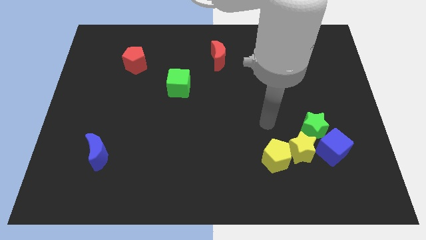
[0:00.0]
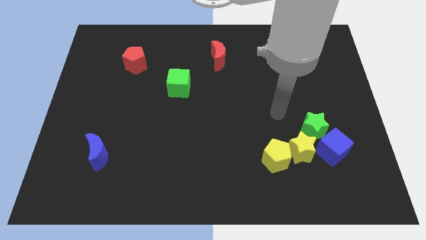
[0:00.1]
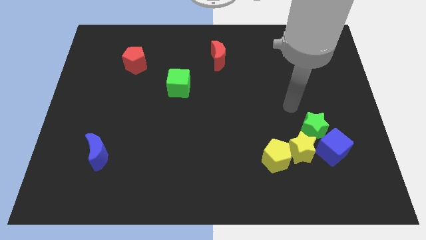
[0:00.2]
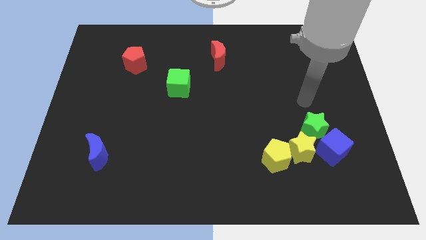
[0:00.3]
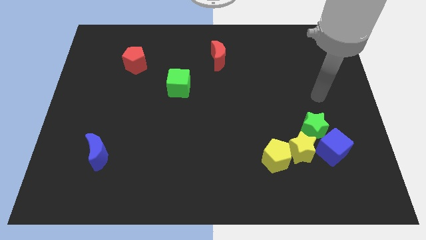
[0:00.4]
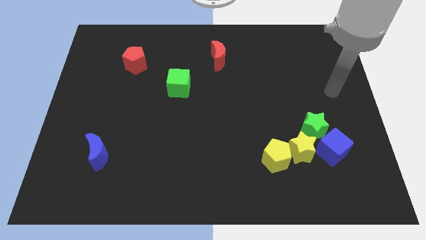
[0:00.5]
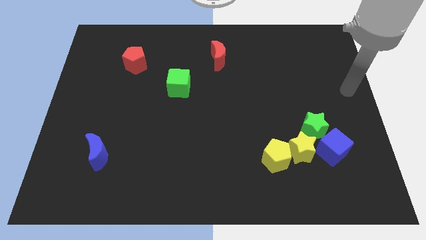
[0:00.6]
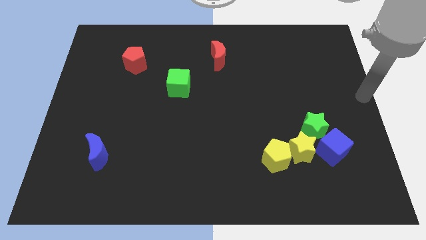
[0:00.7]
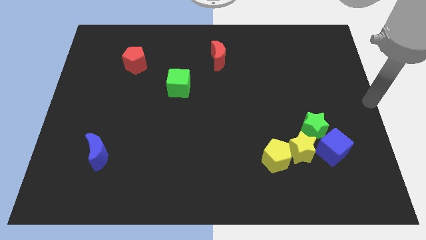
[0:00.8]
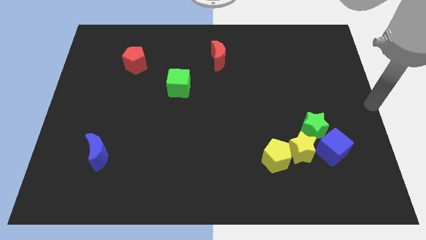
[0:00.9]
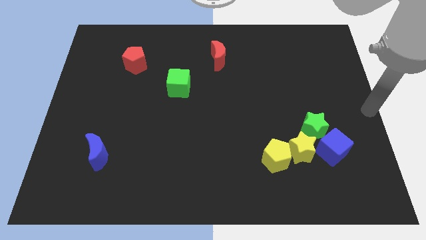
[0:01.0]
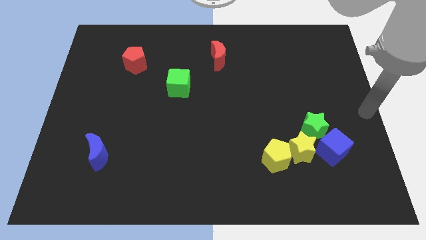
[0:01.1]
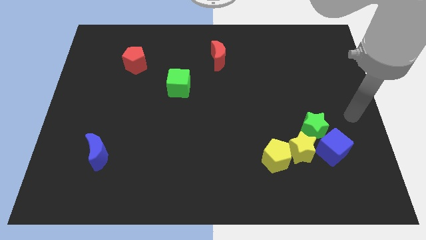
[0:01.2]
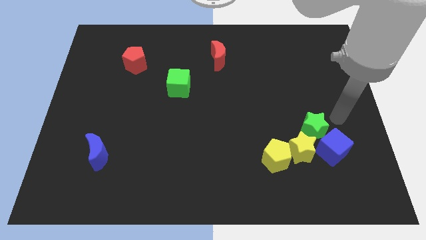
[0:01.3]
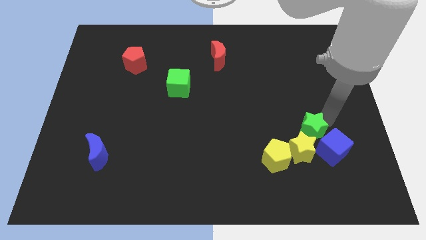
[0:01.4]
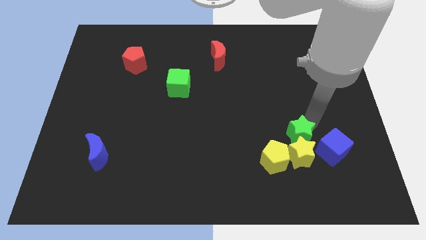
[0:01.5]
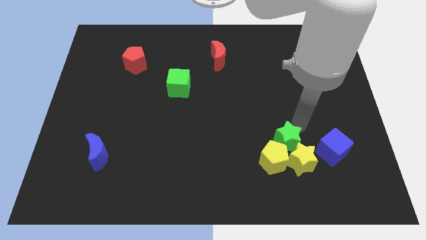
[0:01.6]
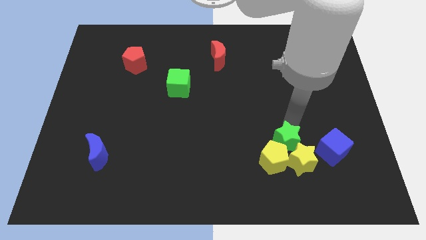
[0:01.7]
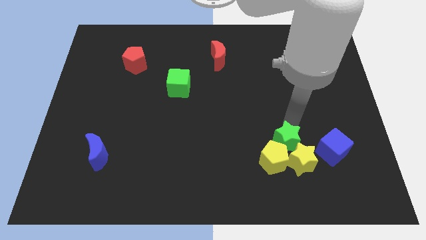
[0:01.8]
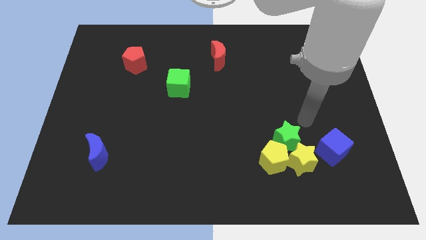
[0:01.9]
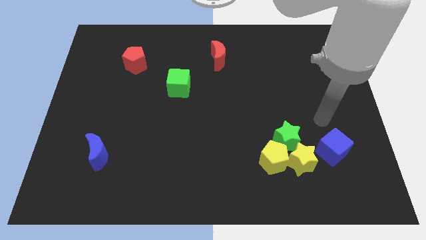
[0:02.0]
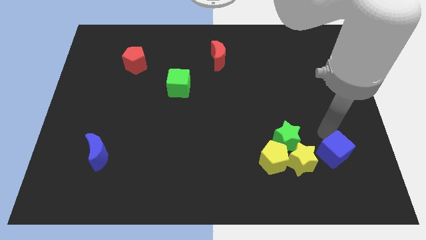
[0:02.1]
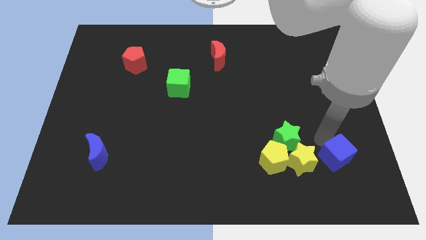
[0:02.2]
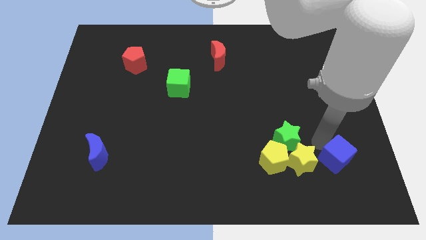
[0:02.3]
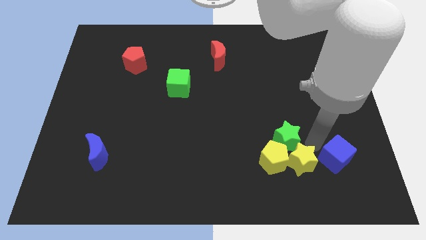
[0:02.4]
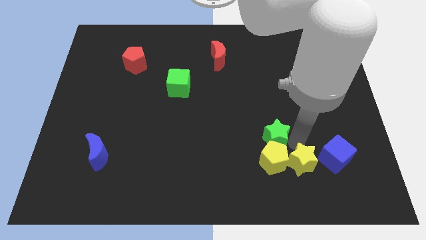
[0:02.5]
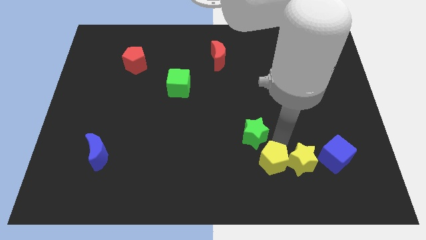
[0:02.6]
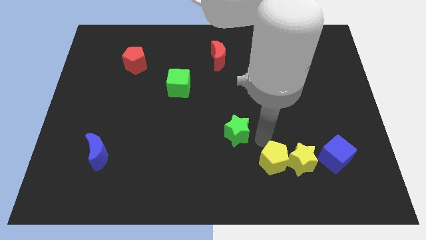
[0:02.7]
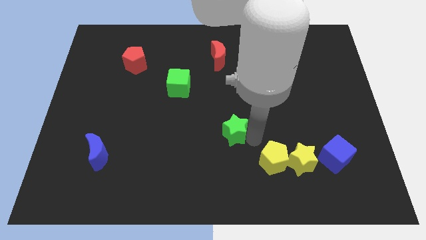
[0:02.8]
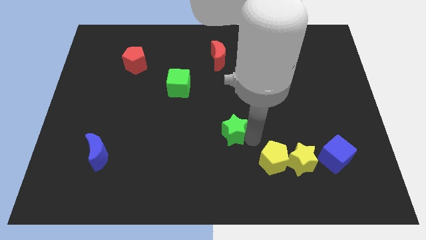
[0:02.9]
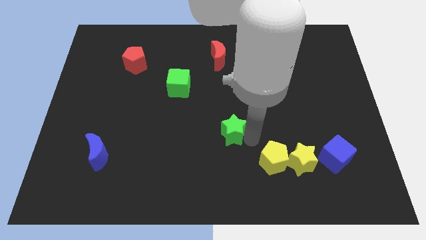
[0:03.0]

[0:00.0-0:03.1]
separate green star from yellow blocks

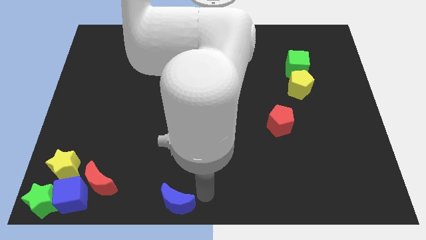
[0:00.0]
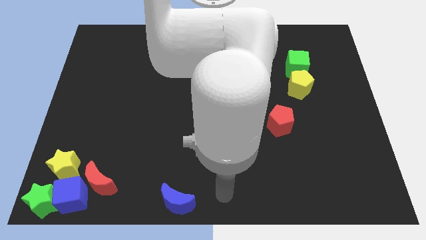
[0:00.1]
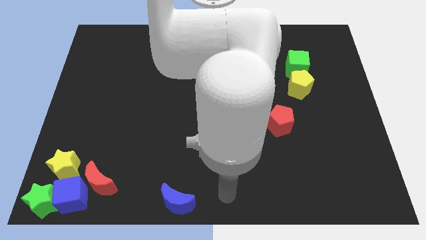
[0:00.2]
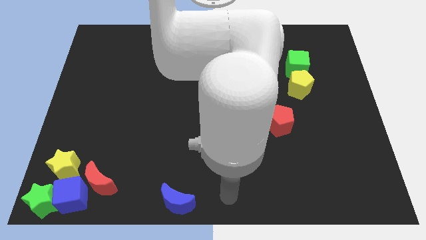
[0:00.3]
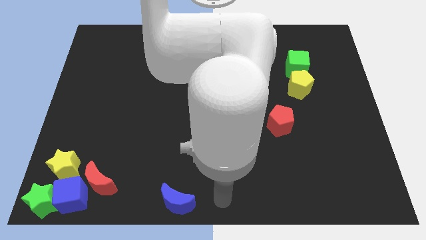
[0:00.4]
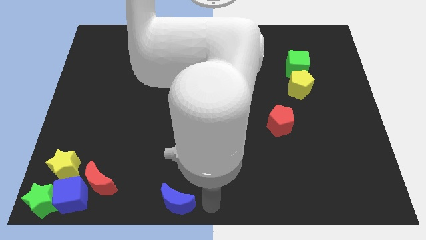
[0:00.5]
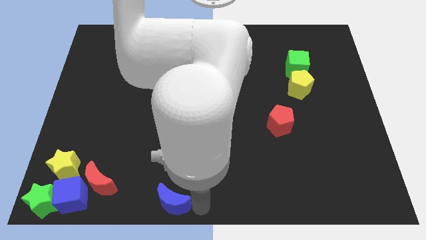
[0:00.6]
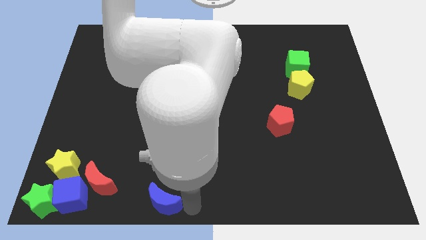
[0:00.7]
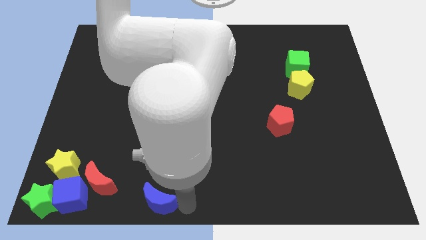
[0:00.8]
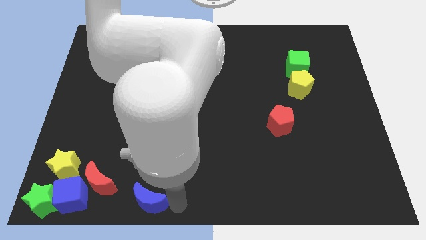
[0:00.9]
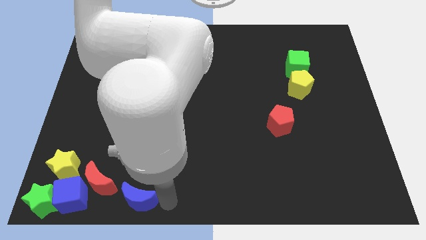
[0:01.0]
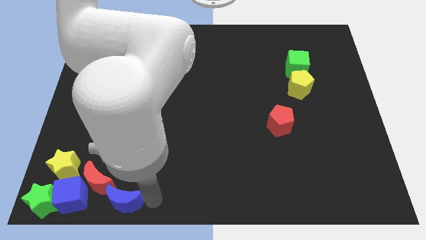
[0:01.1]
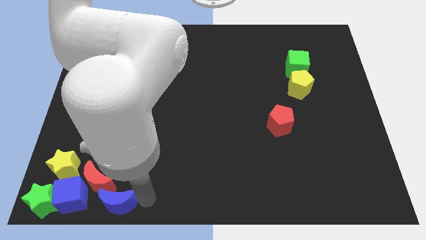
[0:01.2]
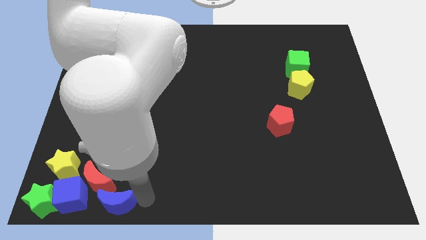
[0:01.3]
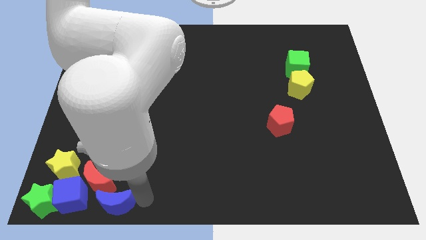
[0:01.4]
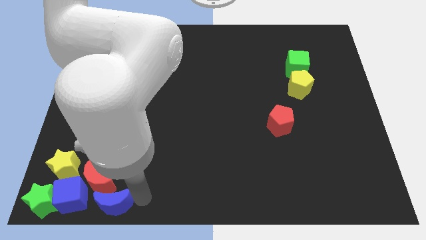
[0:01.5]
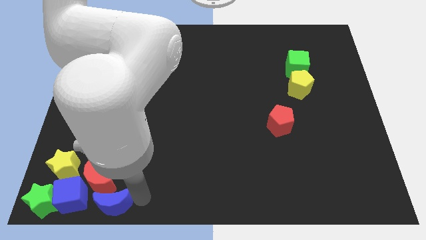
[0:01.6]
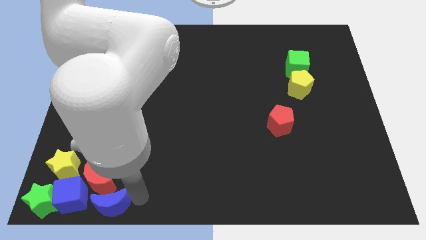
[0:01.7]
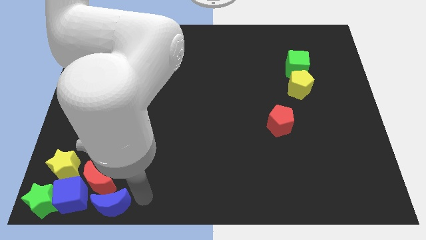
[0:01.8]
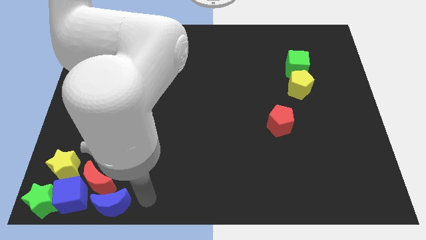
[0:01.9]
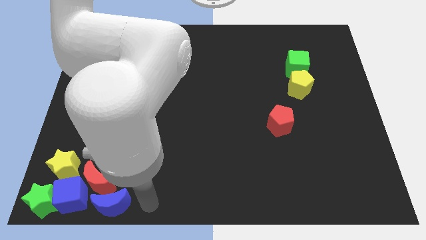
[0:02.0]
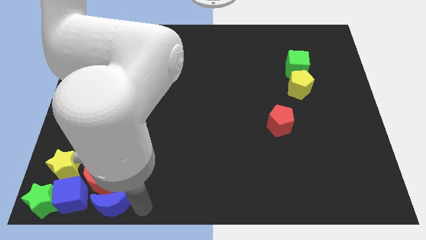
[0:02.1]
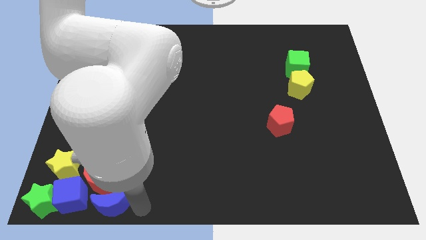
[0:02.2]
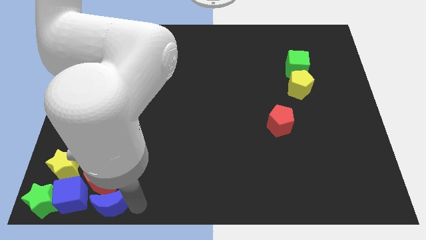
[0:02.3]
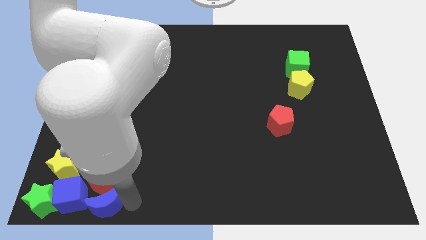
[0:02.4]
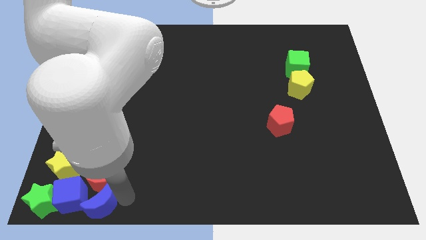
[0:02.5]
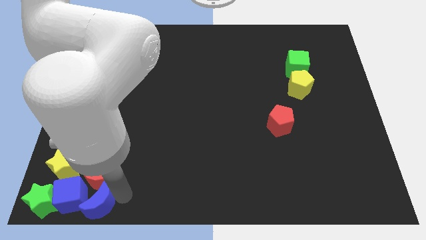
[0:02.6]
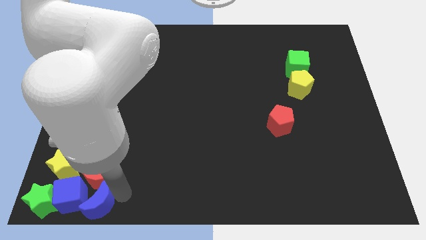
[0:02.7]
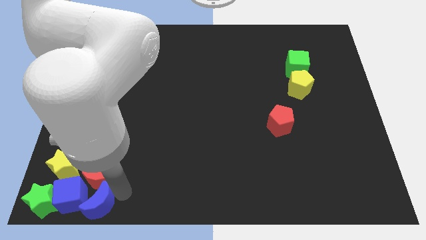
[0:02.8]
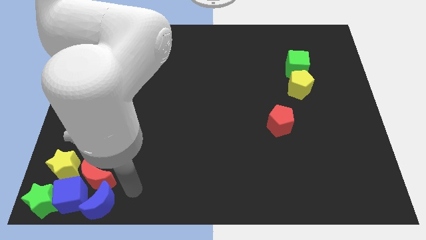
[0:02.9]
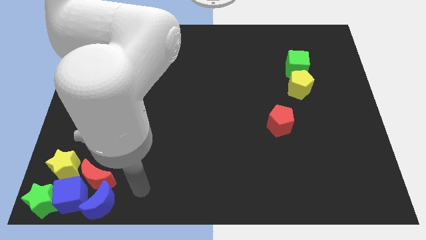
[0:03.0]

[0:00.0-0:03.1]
slide the blue crescent slightly to the left

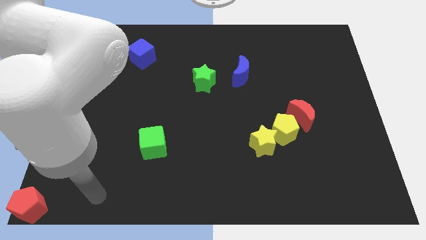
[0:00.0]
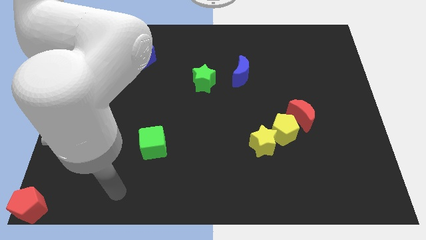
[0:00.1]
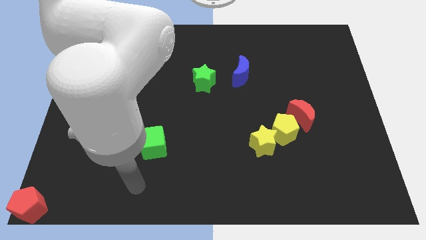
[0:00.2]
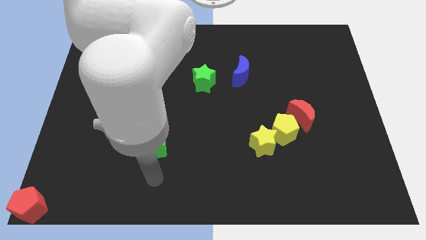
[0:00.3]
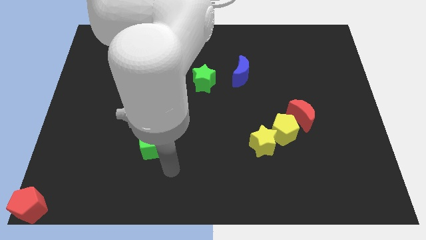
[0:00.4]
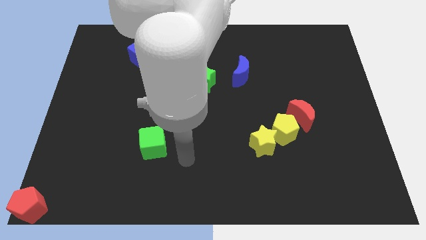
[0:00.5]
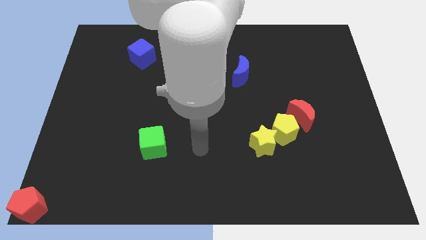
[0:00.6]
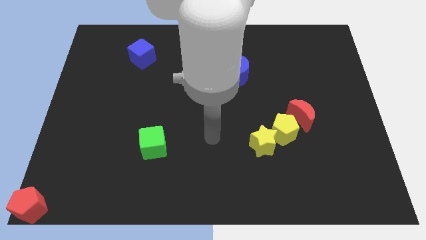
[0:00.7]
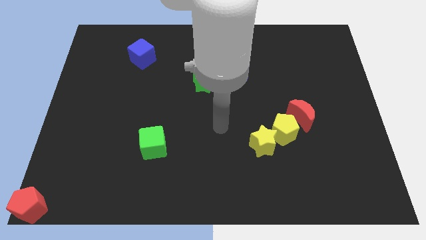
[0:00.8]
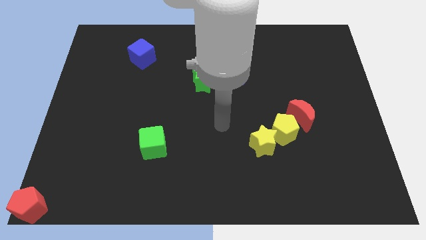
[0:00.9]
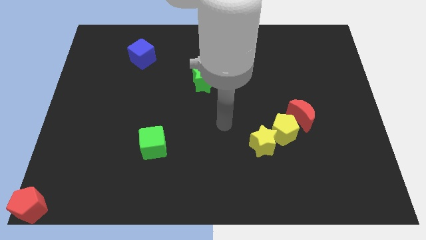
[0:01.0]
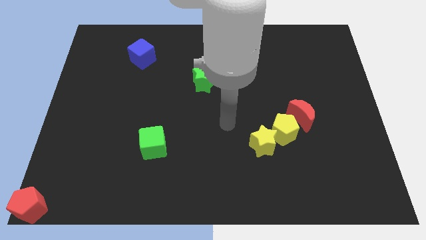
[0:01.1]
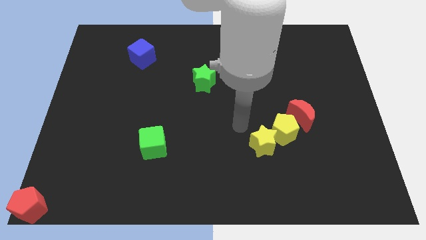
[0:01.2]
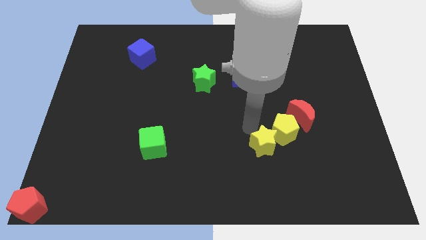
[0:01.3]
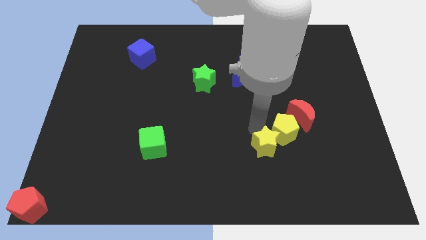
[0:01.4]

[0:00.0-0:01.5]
tap the yellow star

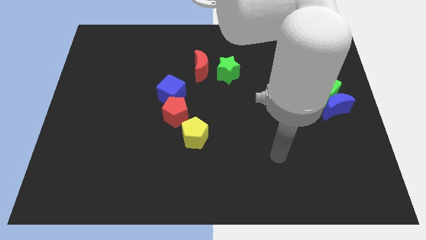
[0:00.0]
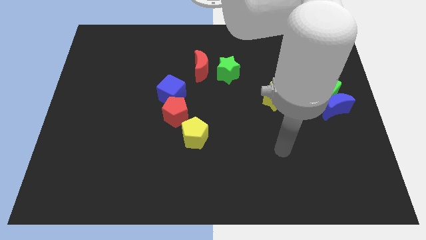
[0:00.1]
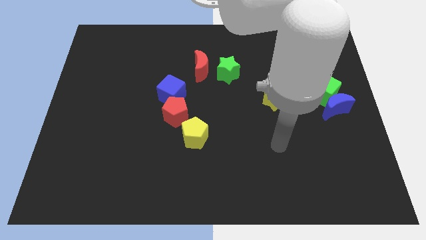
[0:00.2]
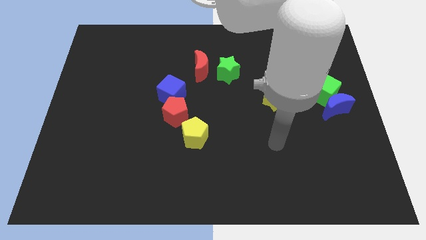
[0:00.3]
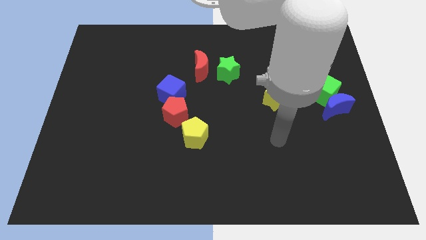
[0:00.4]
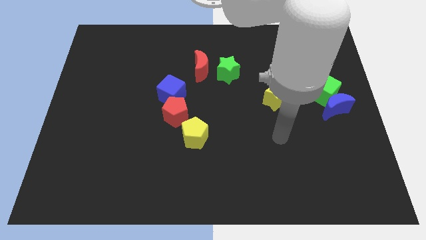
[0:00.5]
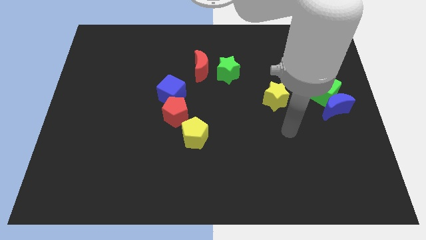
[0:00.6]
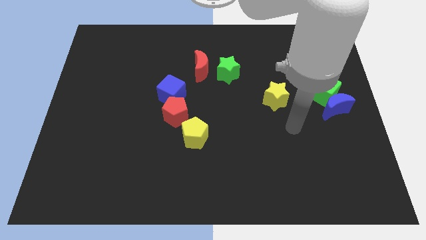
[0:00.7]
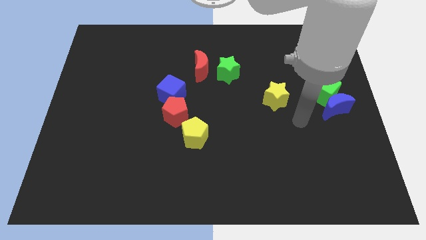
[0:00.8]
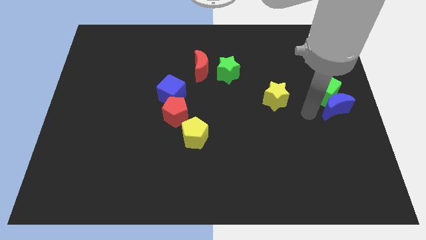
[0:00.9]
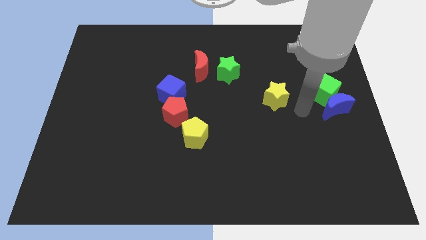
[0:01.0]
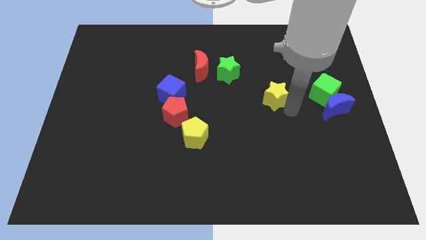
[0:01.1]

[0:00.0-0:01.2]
move your arm close to the yellow star
